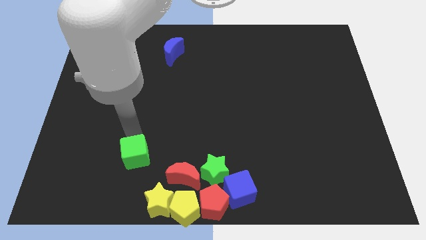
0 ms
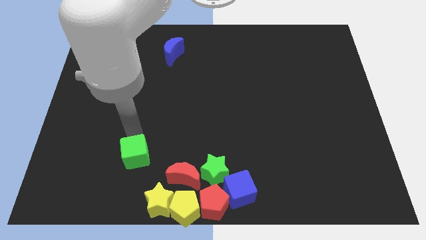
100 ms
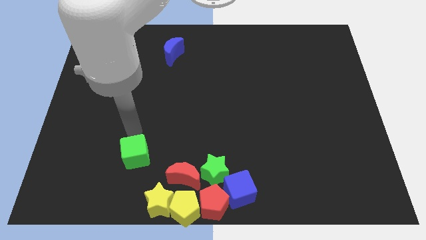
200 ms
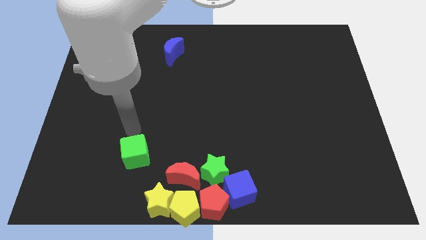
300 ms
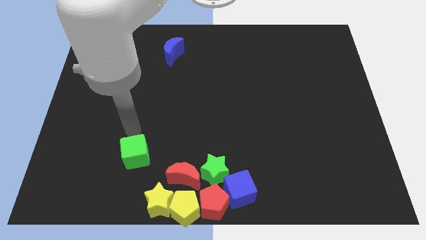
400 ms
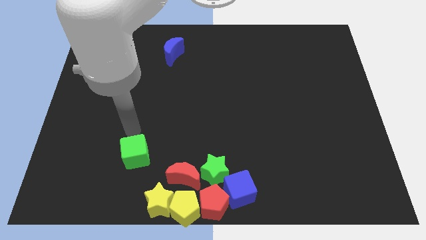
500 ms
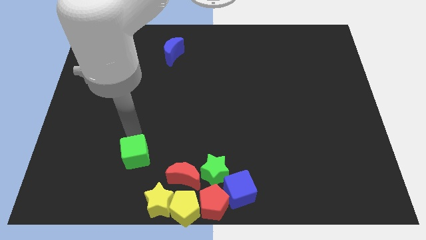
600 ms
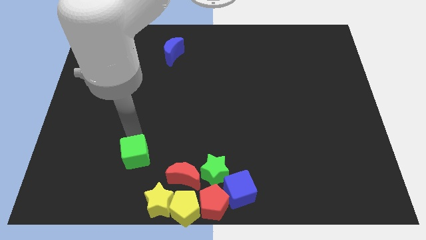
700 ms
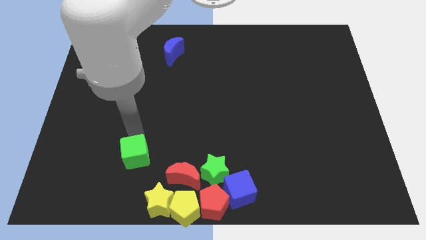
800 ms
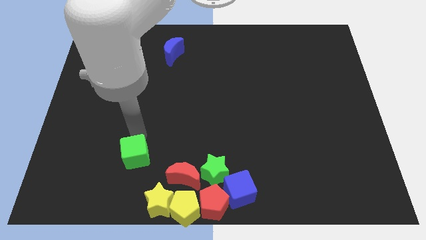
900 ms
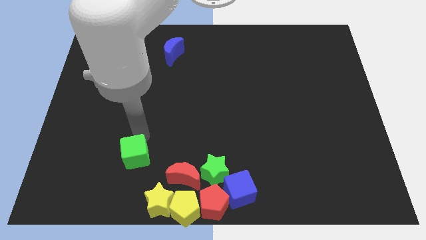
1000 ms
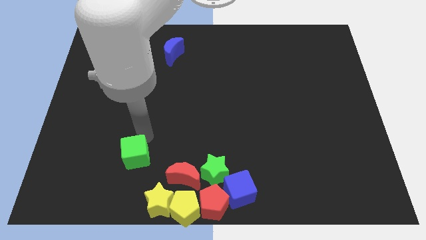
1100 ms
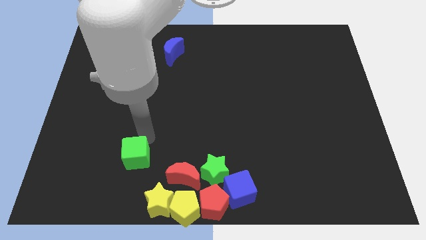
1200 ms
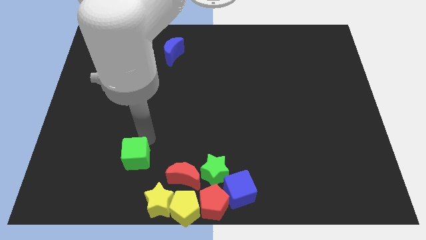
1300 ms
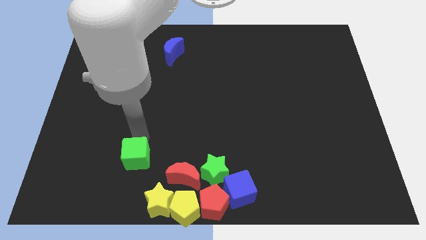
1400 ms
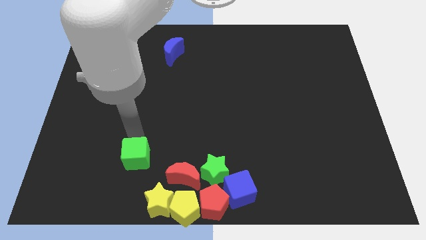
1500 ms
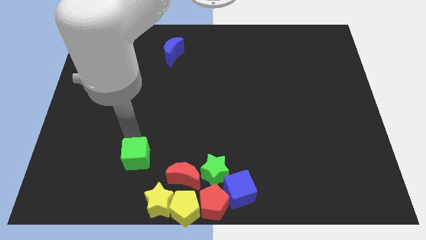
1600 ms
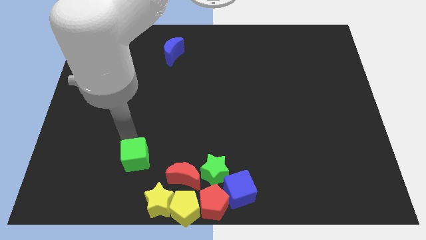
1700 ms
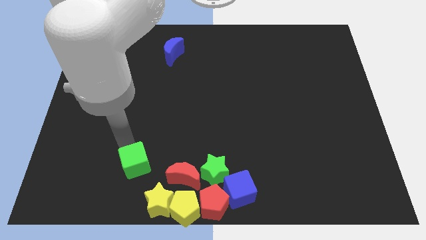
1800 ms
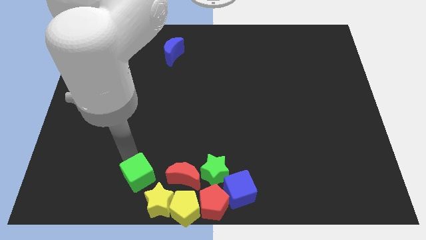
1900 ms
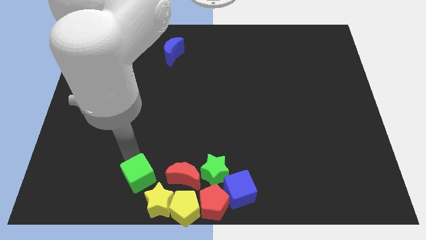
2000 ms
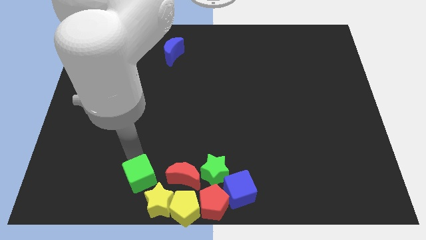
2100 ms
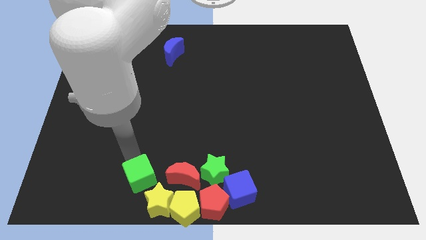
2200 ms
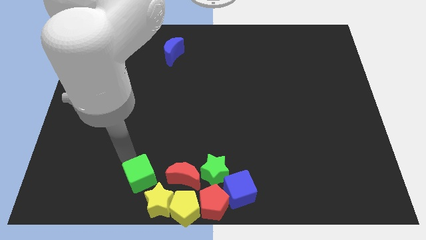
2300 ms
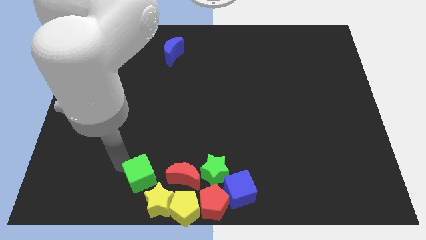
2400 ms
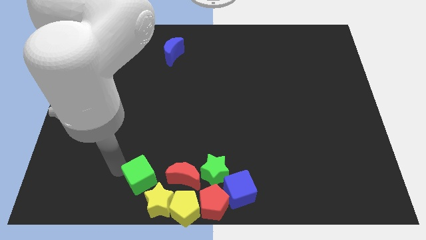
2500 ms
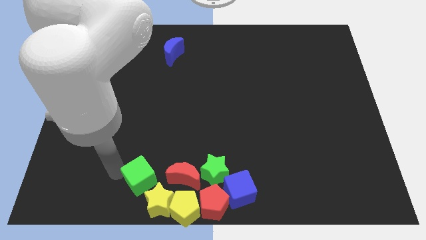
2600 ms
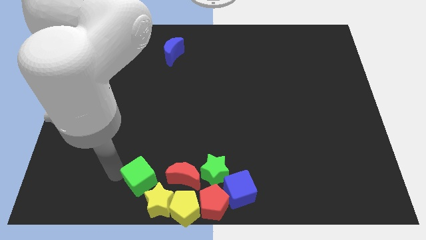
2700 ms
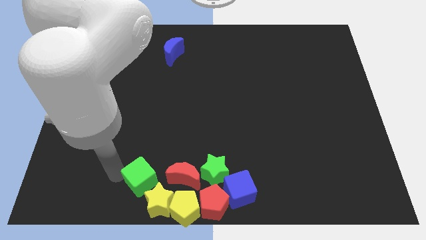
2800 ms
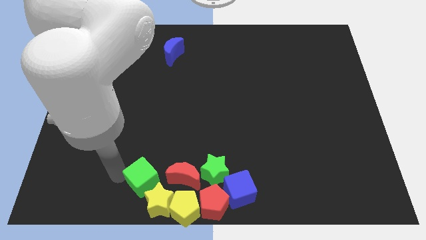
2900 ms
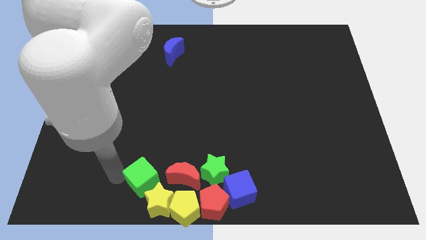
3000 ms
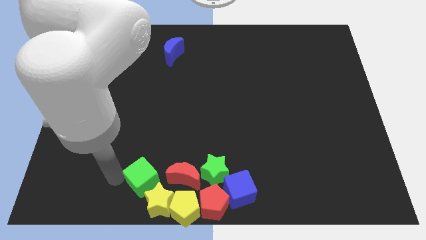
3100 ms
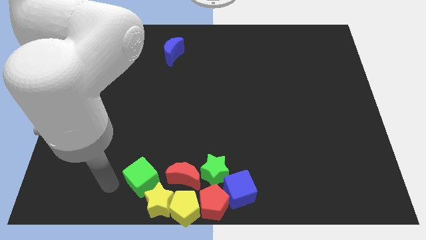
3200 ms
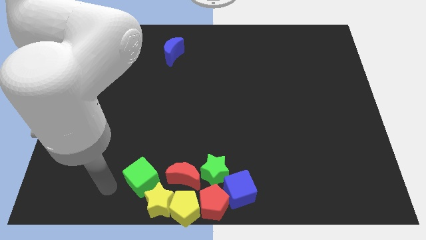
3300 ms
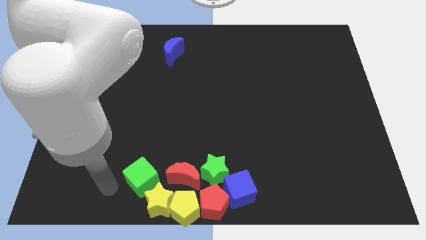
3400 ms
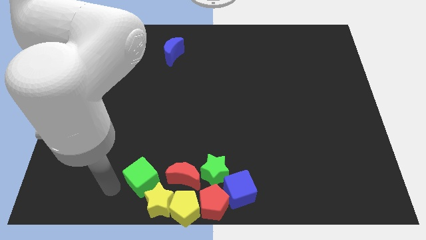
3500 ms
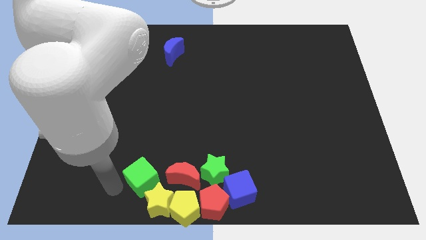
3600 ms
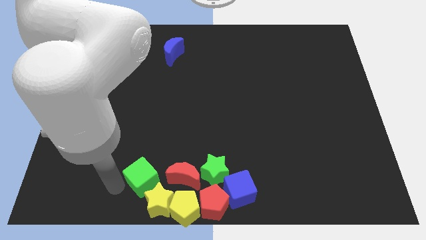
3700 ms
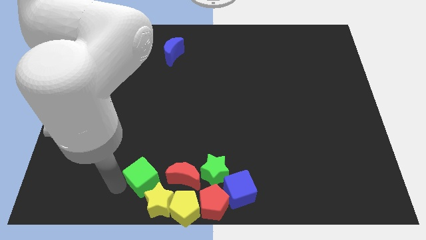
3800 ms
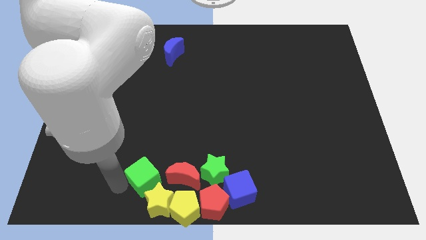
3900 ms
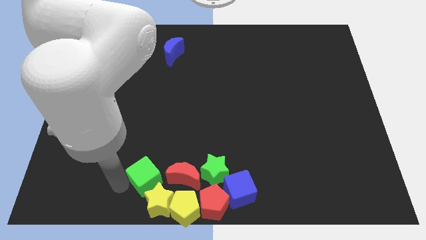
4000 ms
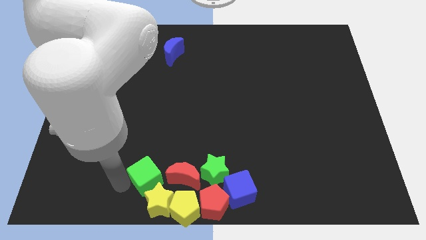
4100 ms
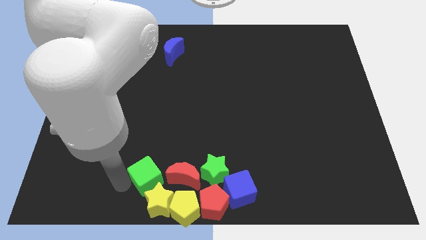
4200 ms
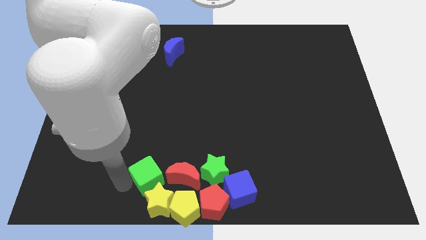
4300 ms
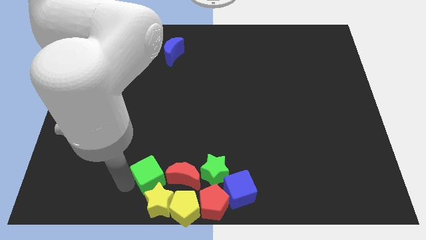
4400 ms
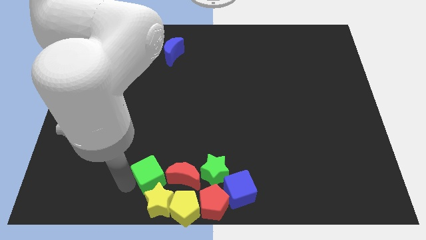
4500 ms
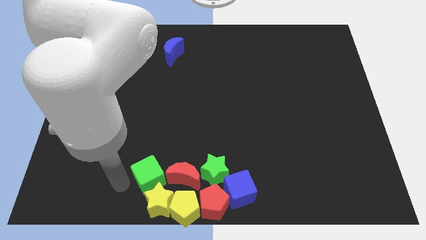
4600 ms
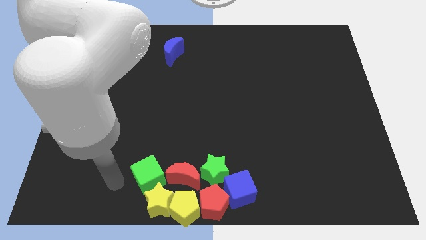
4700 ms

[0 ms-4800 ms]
move the green cube left to the red crescent

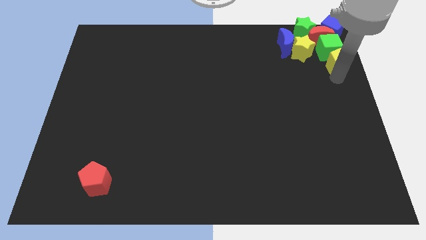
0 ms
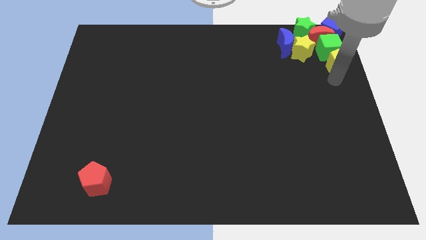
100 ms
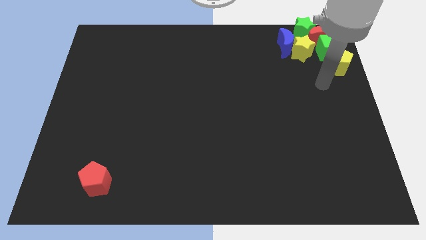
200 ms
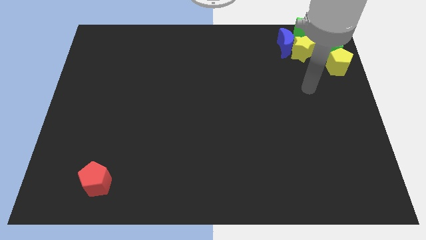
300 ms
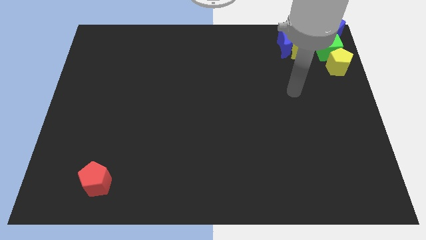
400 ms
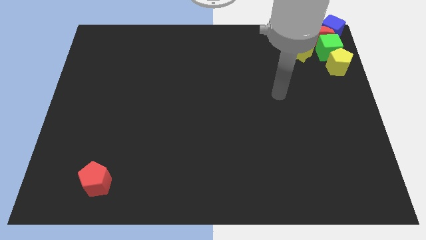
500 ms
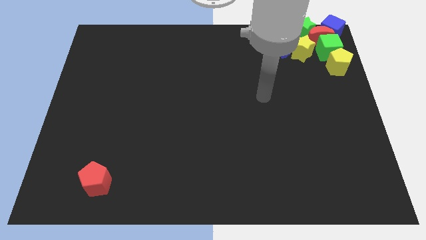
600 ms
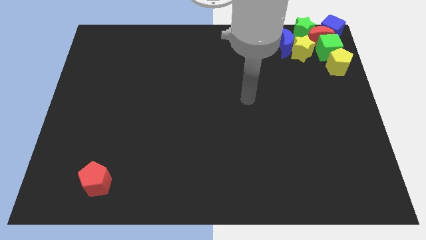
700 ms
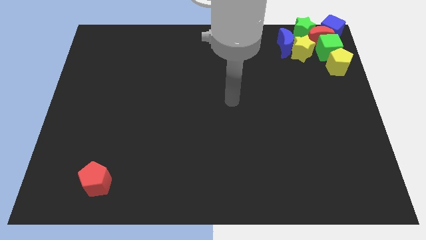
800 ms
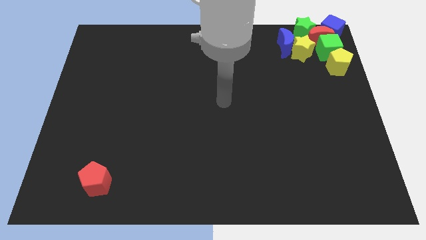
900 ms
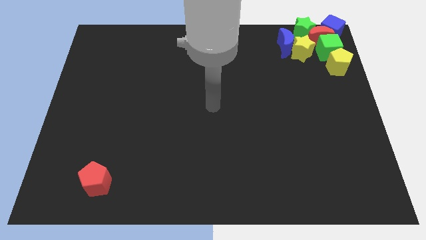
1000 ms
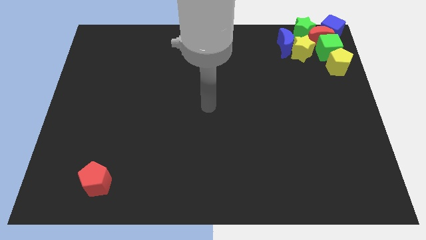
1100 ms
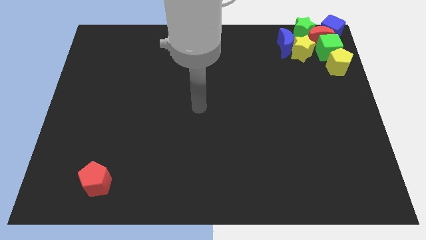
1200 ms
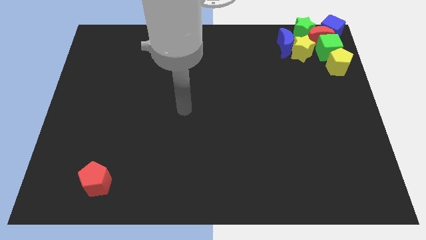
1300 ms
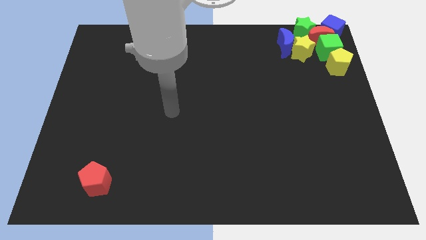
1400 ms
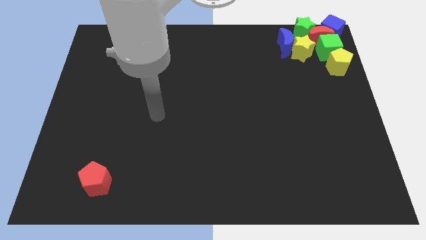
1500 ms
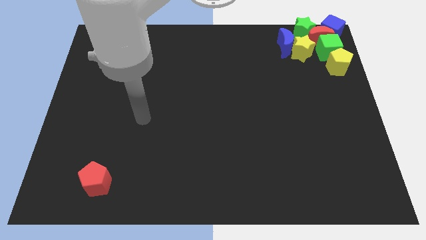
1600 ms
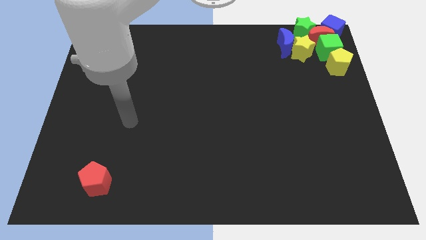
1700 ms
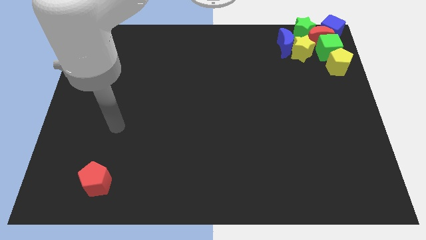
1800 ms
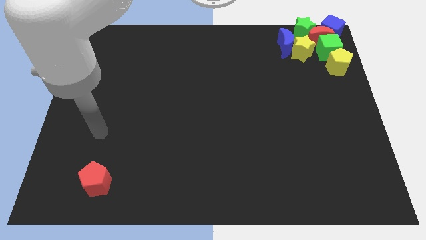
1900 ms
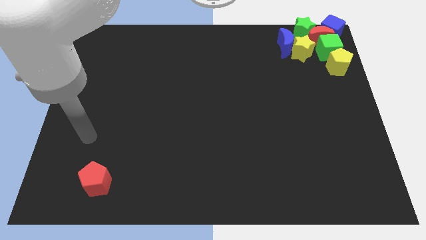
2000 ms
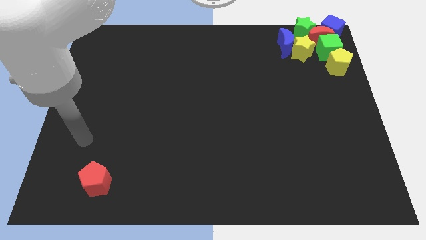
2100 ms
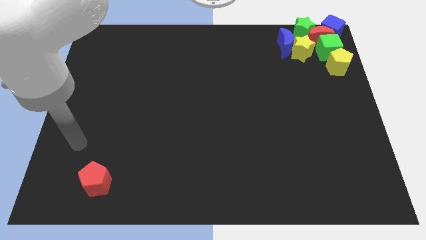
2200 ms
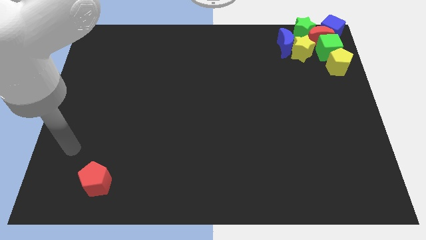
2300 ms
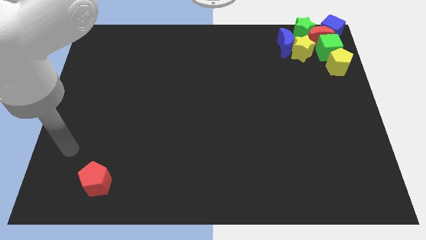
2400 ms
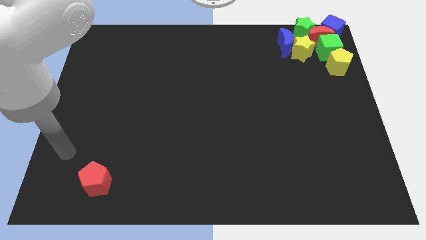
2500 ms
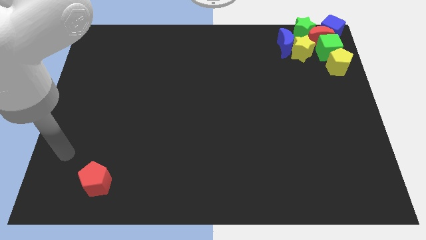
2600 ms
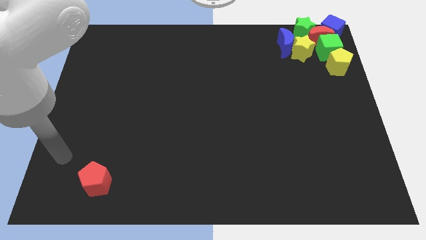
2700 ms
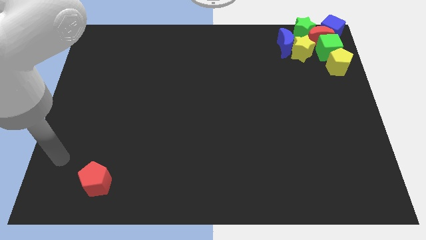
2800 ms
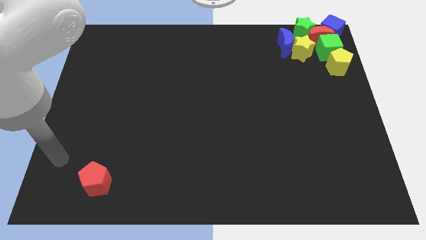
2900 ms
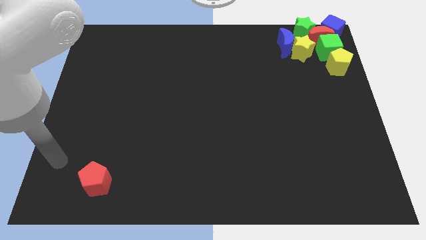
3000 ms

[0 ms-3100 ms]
move your arm away from the yellow pentagon

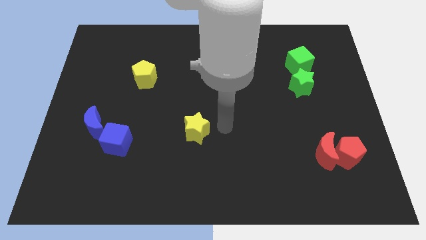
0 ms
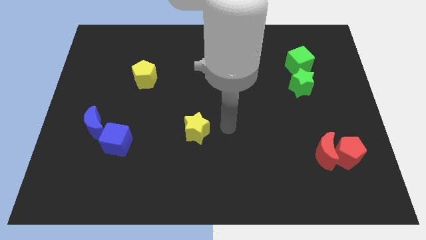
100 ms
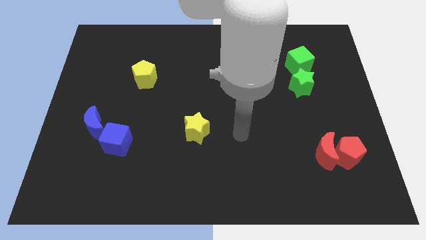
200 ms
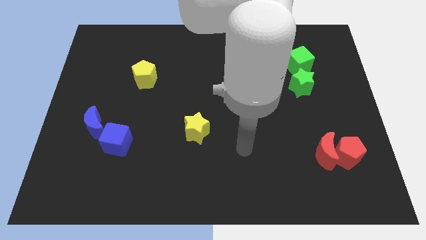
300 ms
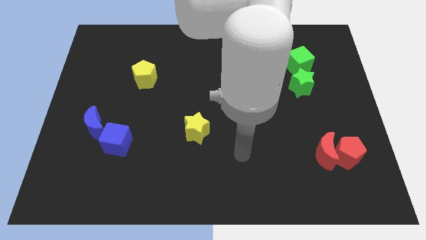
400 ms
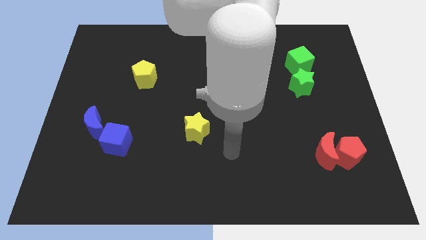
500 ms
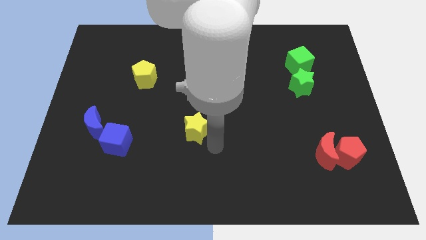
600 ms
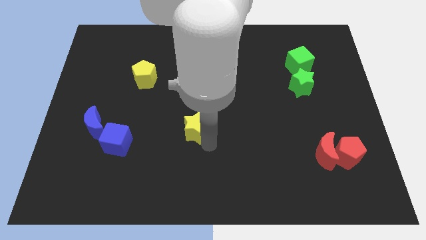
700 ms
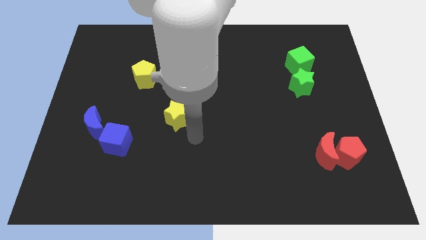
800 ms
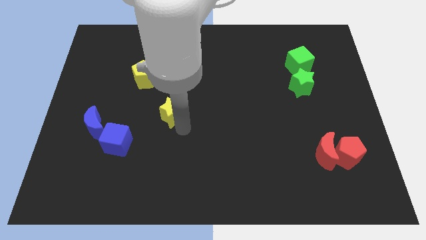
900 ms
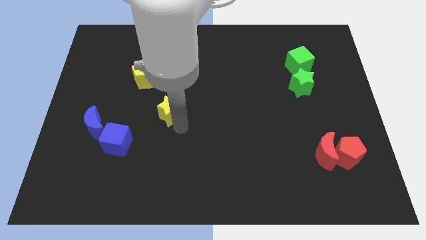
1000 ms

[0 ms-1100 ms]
slide yellow star towards yellow pentagon
